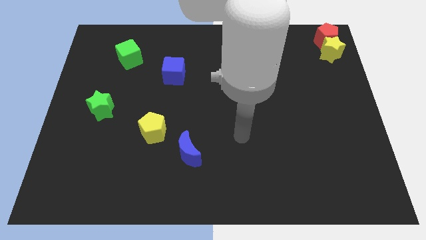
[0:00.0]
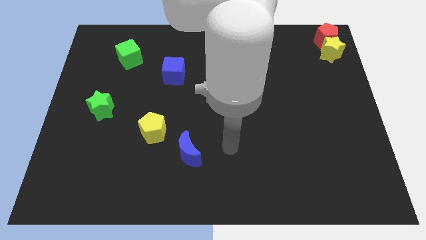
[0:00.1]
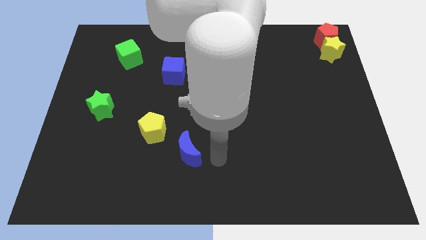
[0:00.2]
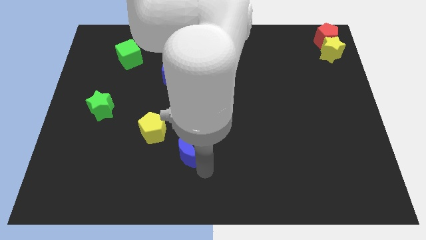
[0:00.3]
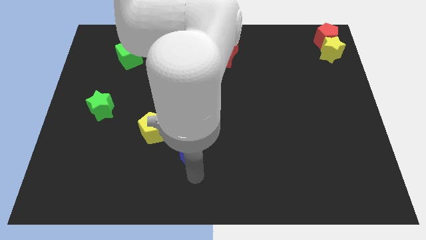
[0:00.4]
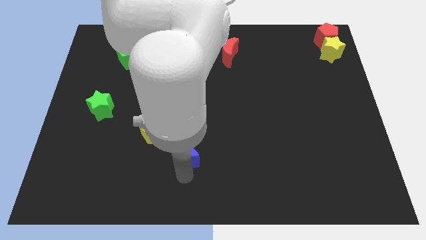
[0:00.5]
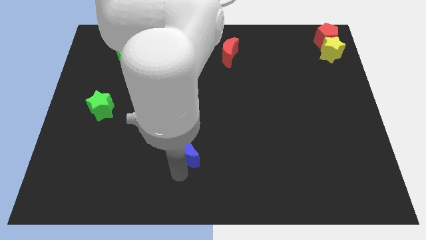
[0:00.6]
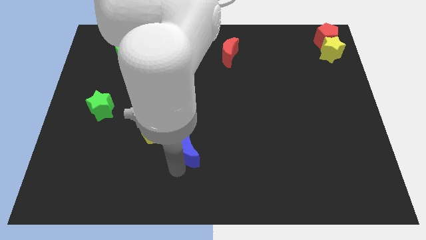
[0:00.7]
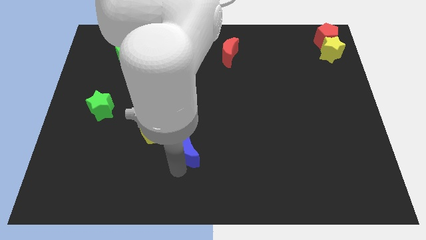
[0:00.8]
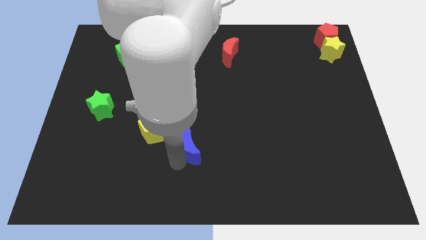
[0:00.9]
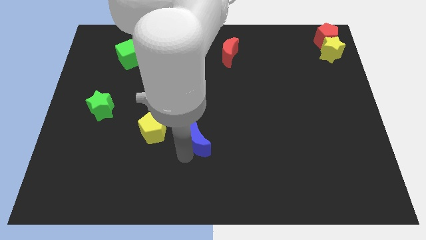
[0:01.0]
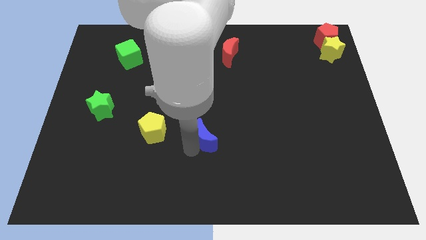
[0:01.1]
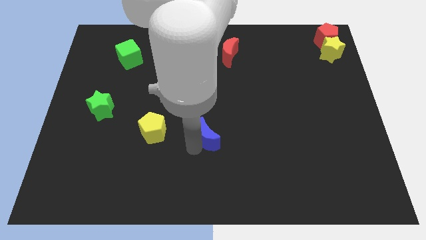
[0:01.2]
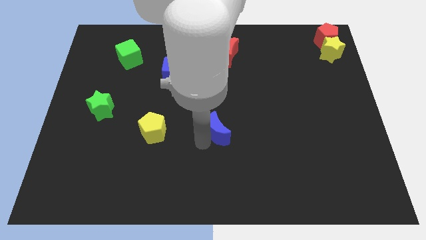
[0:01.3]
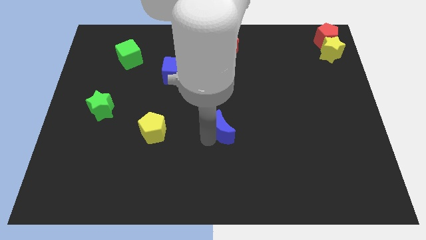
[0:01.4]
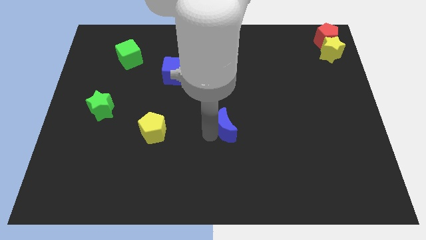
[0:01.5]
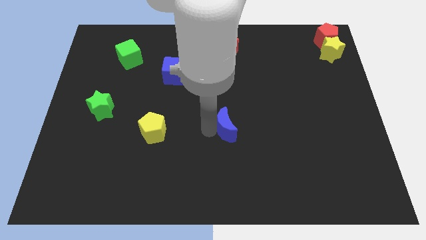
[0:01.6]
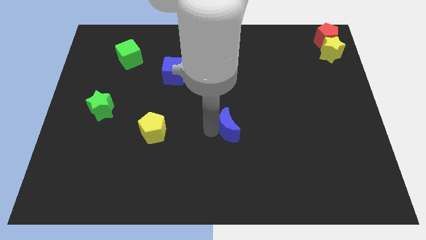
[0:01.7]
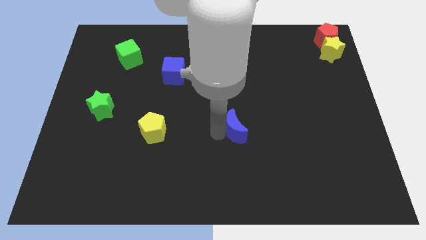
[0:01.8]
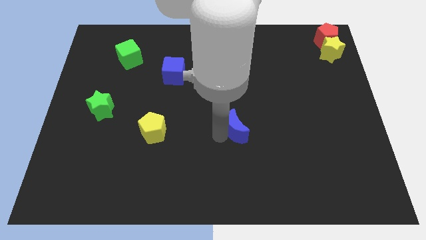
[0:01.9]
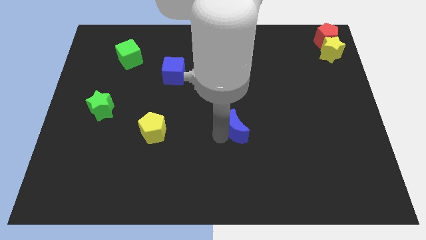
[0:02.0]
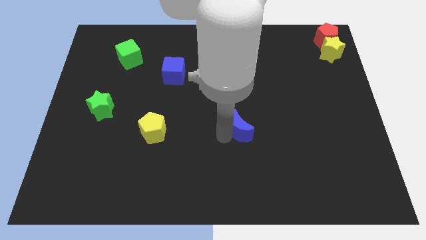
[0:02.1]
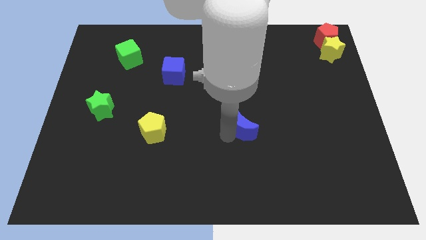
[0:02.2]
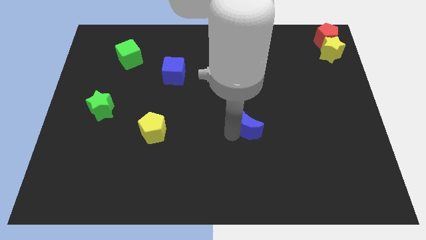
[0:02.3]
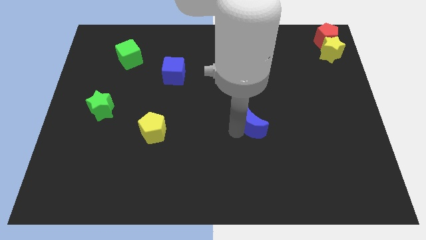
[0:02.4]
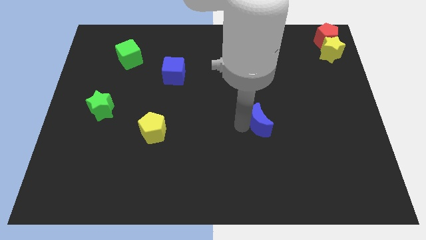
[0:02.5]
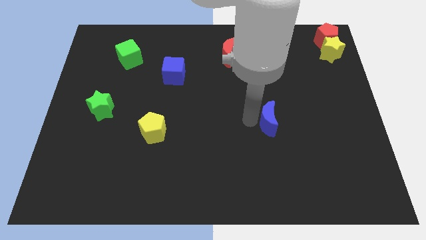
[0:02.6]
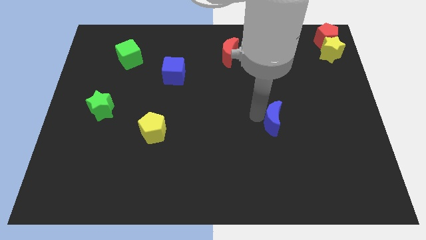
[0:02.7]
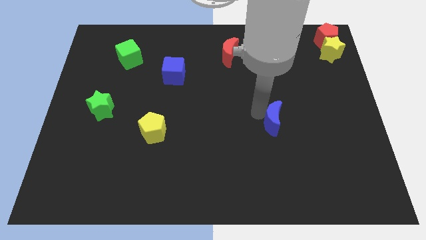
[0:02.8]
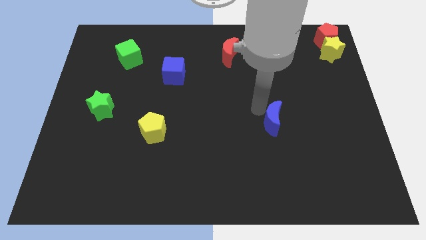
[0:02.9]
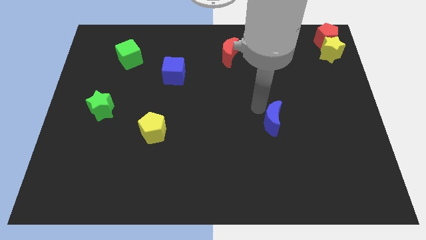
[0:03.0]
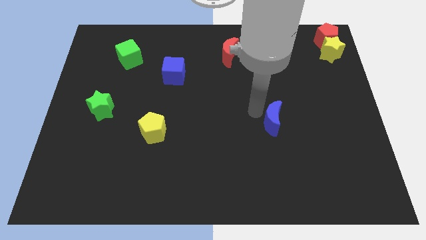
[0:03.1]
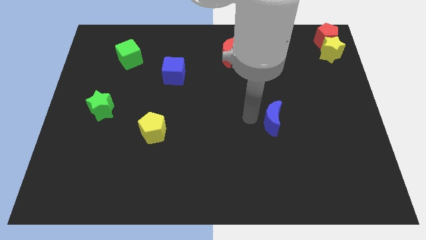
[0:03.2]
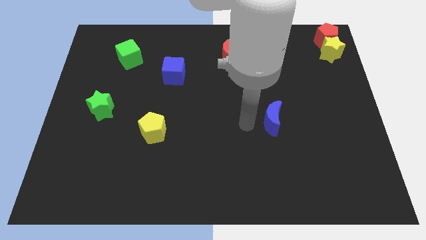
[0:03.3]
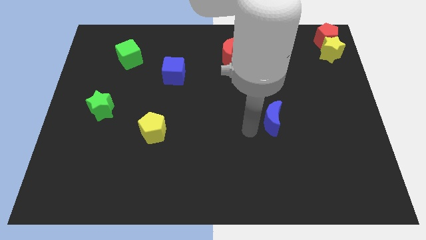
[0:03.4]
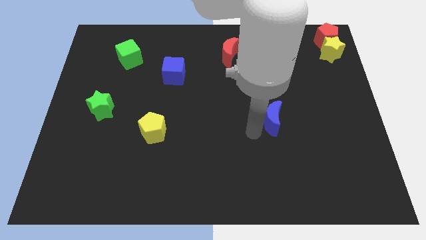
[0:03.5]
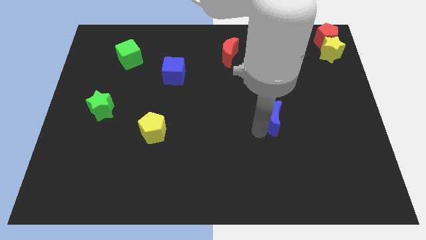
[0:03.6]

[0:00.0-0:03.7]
push the blue crescent towards the center right of the board

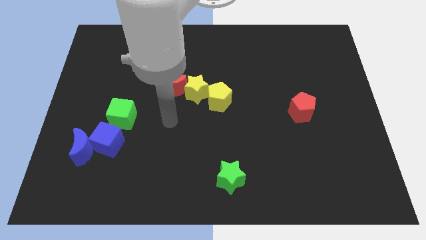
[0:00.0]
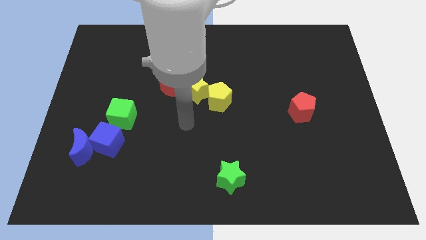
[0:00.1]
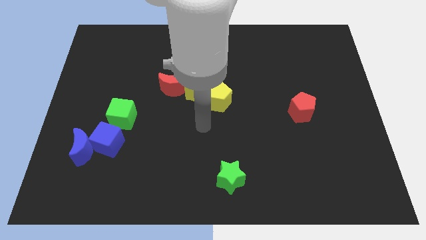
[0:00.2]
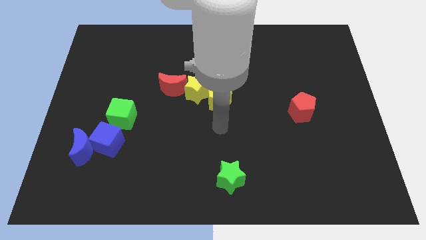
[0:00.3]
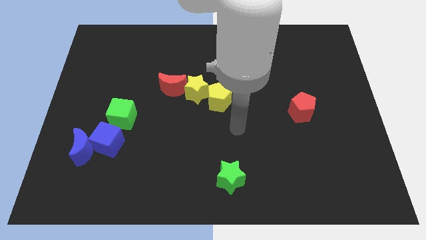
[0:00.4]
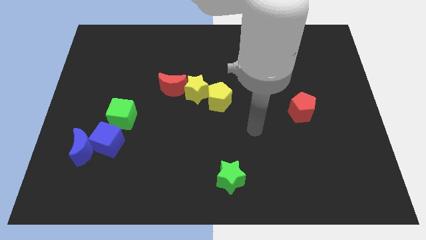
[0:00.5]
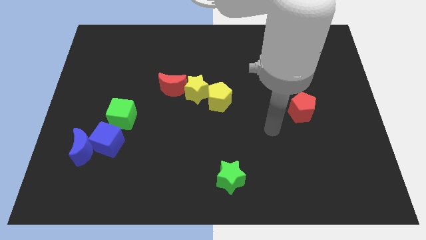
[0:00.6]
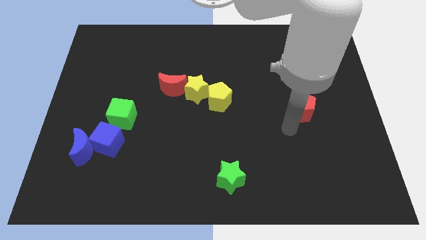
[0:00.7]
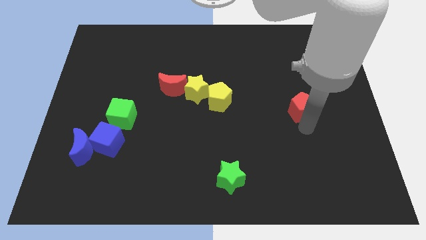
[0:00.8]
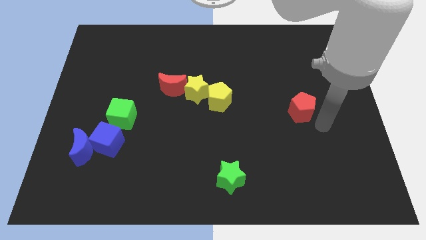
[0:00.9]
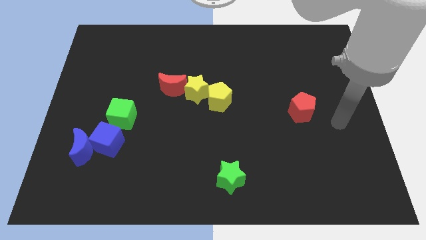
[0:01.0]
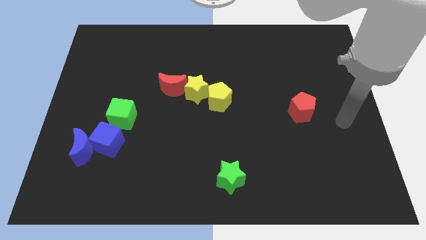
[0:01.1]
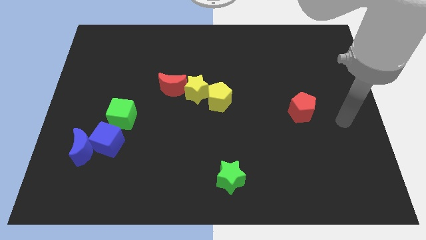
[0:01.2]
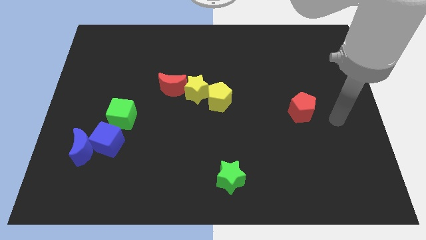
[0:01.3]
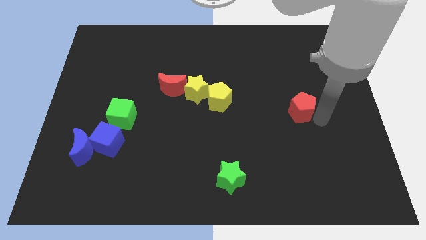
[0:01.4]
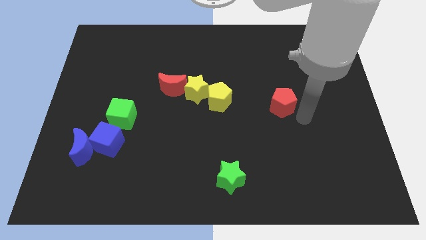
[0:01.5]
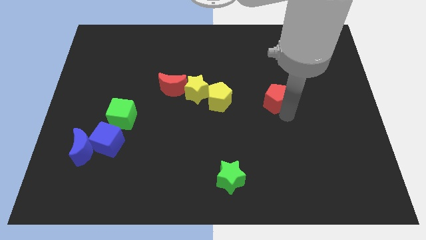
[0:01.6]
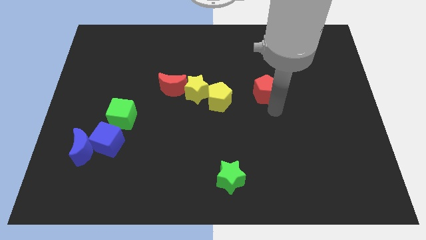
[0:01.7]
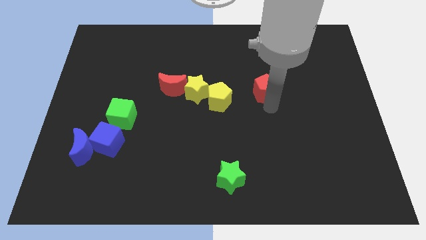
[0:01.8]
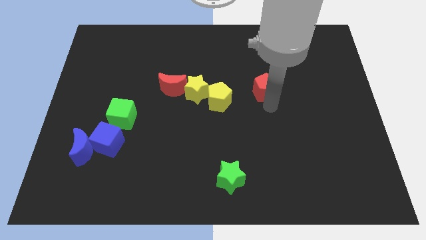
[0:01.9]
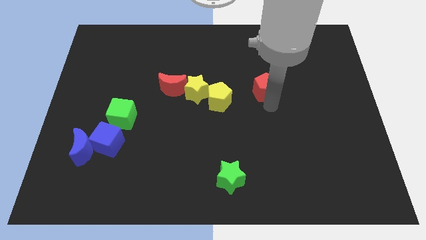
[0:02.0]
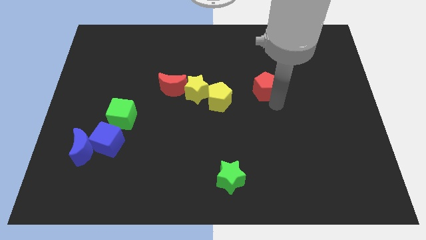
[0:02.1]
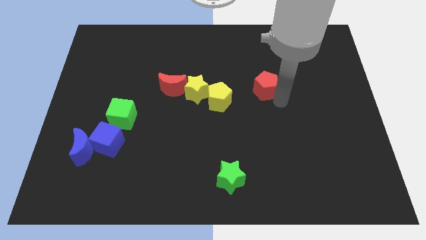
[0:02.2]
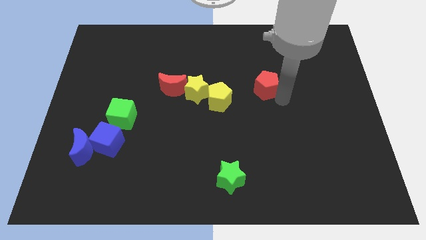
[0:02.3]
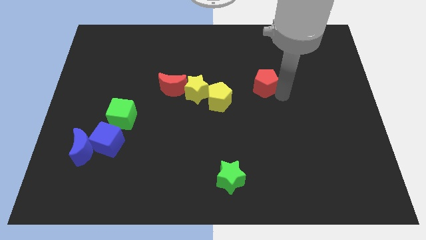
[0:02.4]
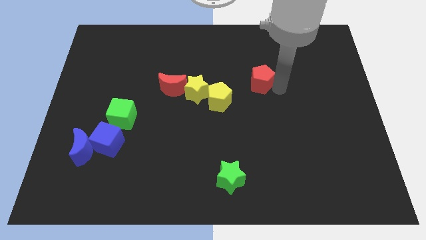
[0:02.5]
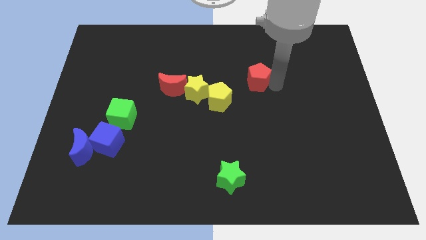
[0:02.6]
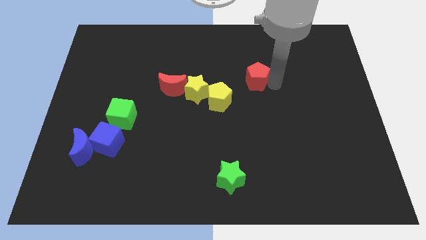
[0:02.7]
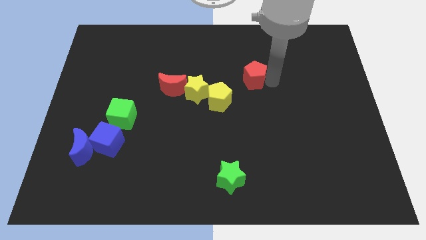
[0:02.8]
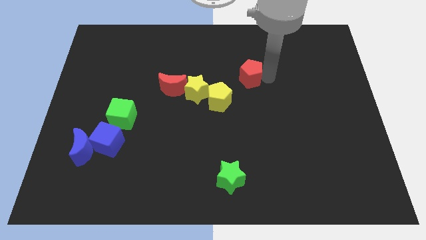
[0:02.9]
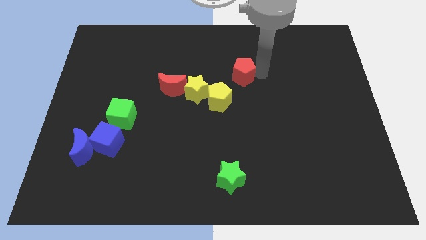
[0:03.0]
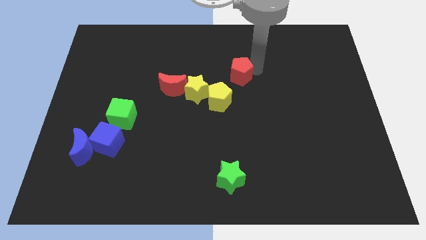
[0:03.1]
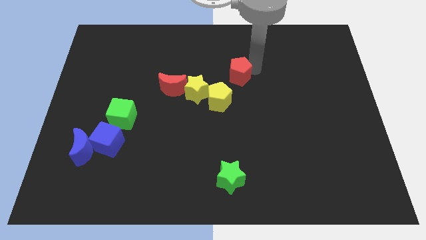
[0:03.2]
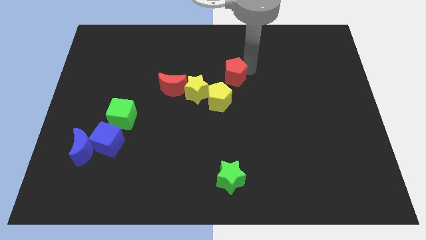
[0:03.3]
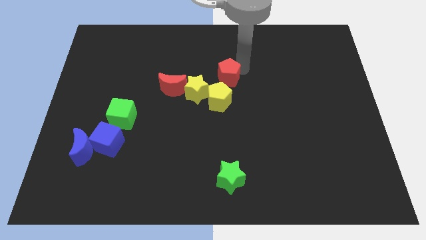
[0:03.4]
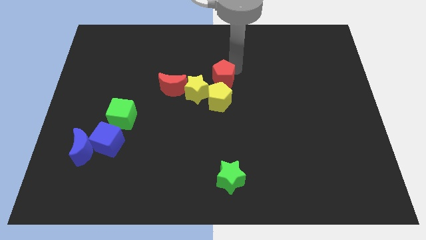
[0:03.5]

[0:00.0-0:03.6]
move the red pentagon at the top side of the yellow pentagon

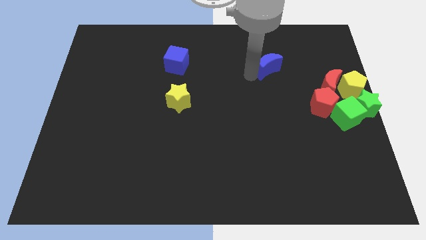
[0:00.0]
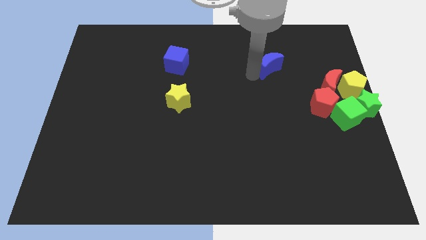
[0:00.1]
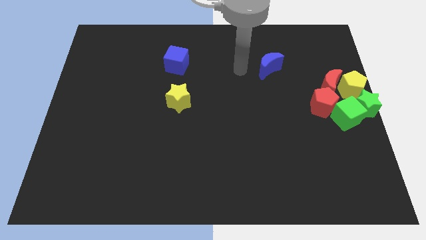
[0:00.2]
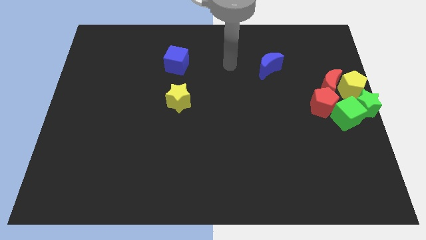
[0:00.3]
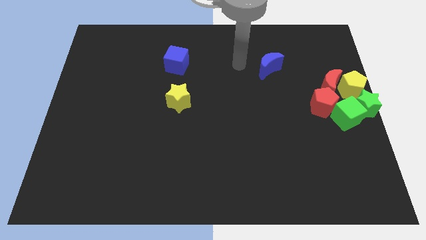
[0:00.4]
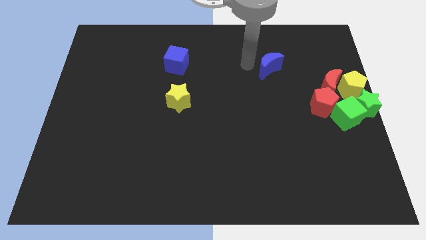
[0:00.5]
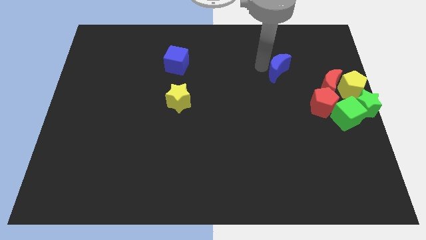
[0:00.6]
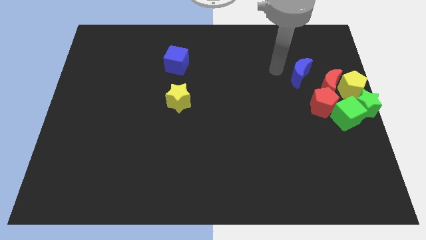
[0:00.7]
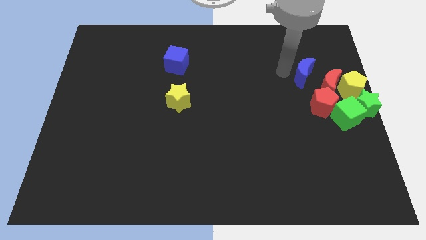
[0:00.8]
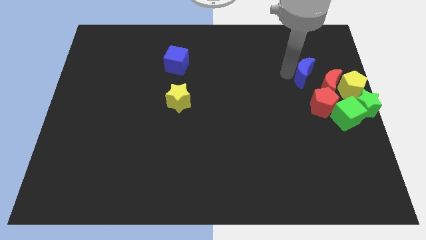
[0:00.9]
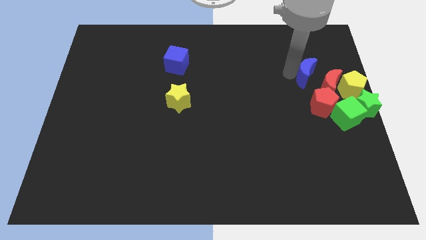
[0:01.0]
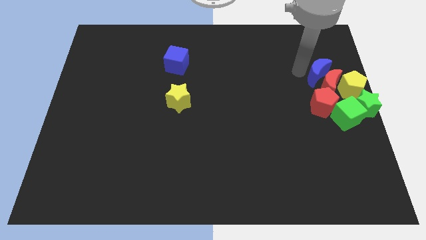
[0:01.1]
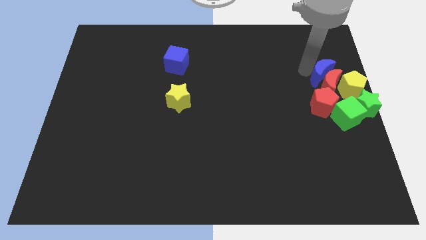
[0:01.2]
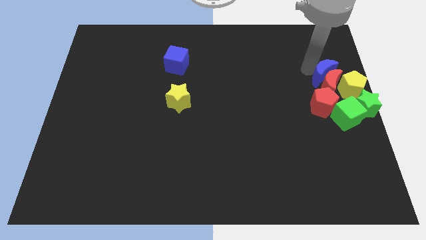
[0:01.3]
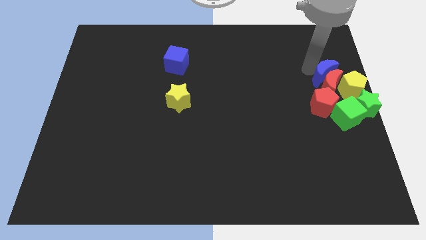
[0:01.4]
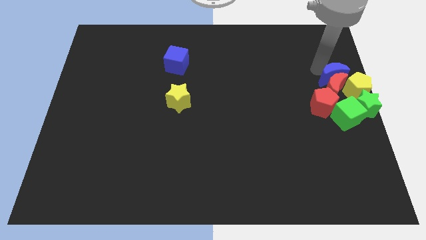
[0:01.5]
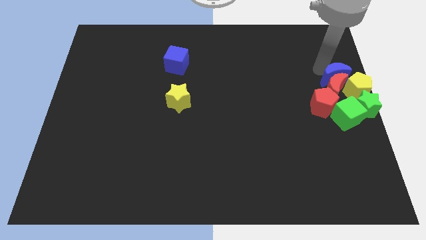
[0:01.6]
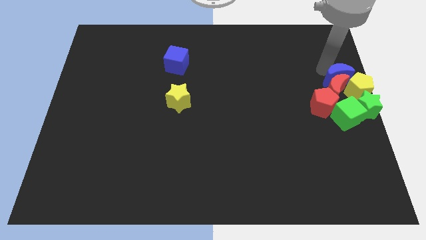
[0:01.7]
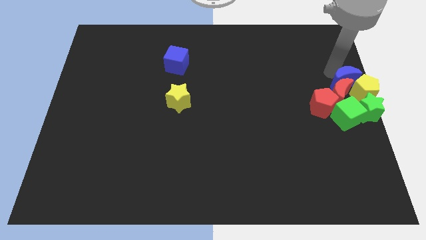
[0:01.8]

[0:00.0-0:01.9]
push the blue crescent into the red crescent
